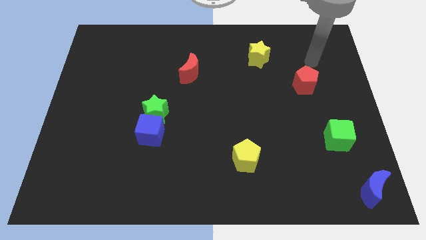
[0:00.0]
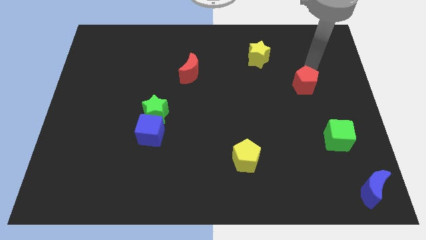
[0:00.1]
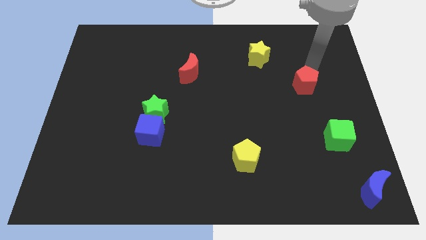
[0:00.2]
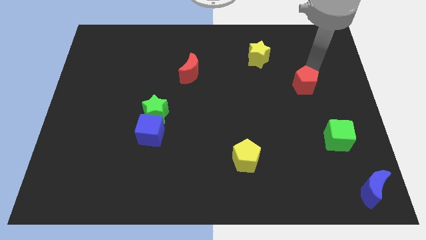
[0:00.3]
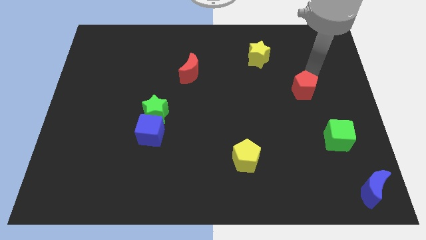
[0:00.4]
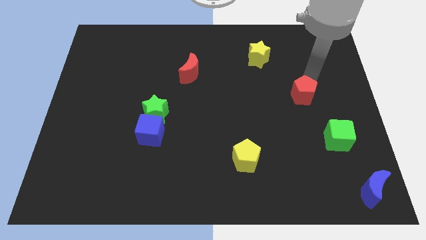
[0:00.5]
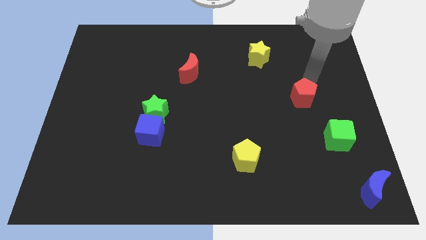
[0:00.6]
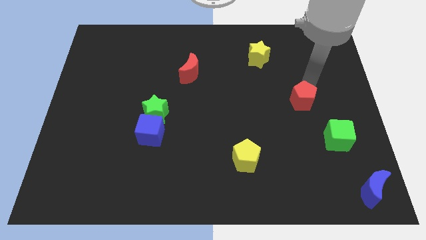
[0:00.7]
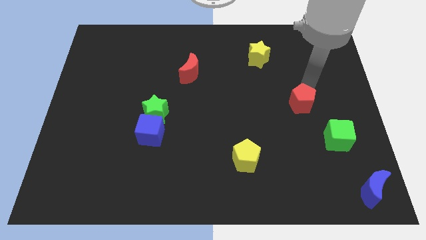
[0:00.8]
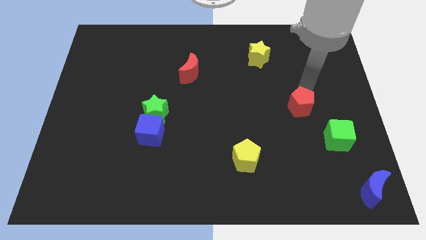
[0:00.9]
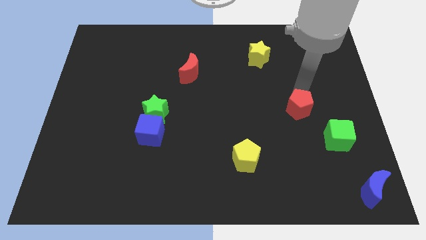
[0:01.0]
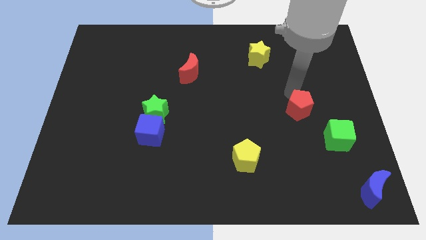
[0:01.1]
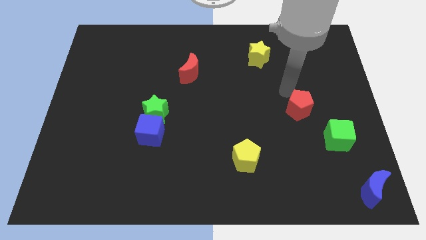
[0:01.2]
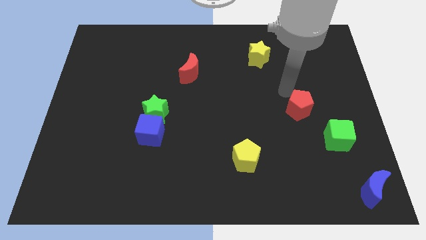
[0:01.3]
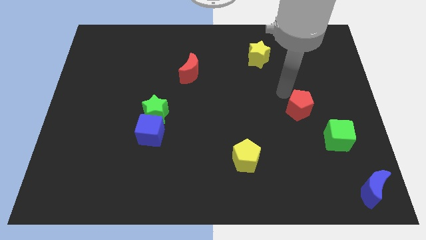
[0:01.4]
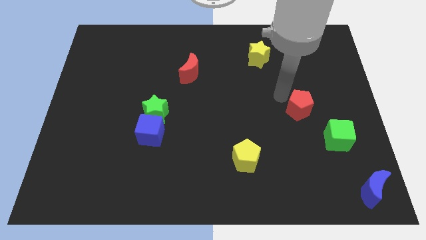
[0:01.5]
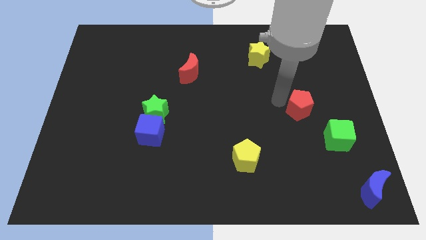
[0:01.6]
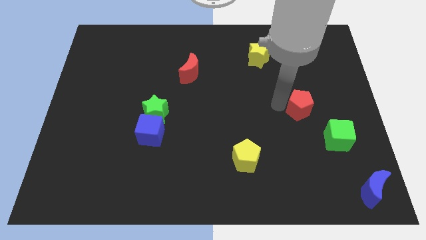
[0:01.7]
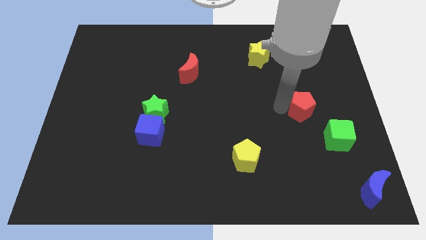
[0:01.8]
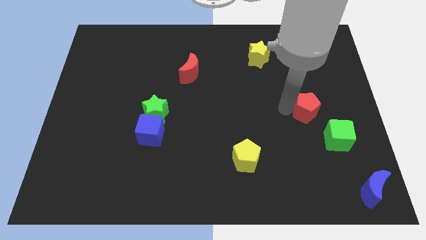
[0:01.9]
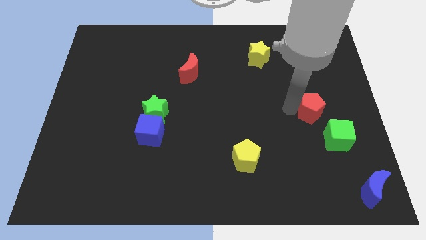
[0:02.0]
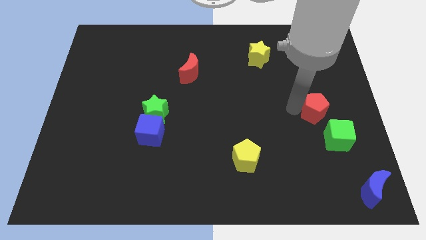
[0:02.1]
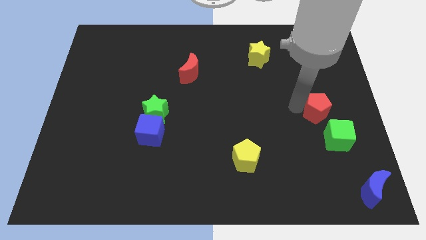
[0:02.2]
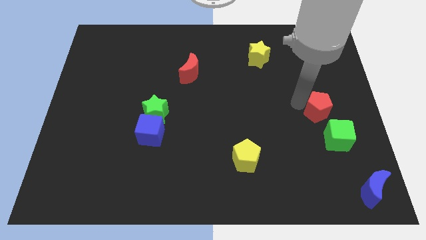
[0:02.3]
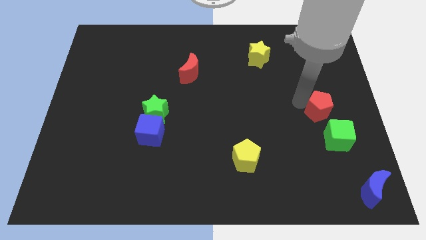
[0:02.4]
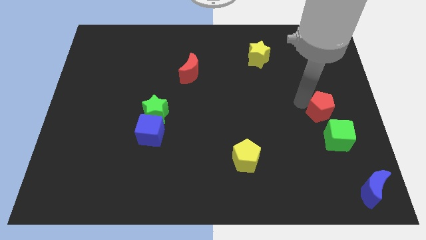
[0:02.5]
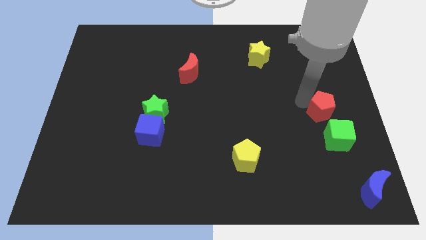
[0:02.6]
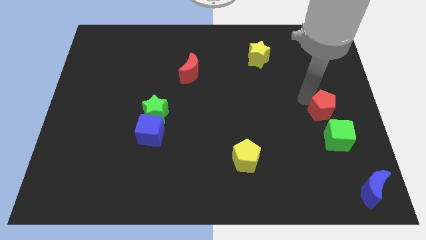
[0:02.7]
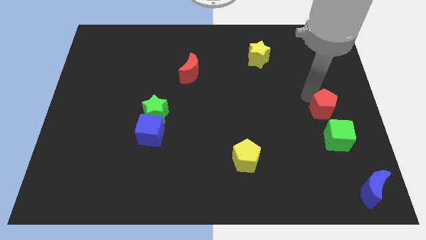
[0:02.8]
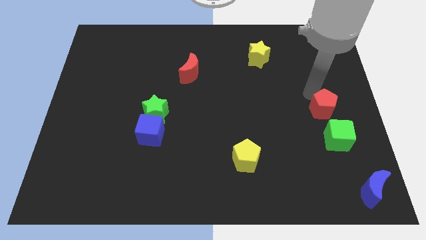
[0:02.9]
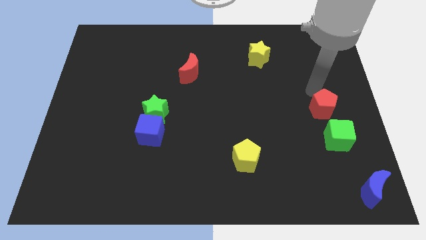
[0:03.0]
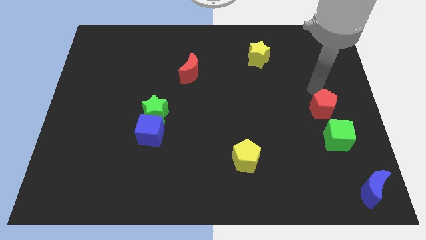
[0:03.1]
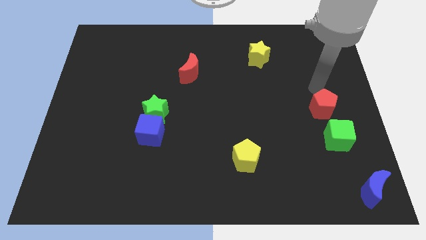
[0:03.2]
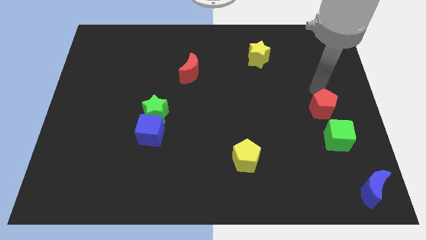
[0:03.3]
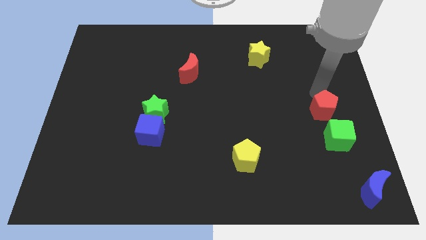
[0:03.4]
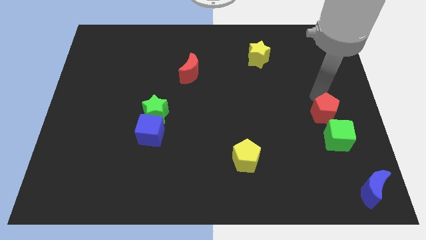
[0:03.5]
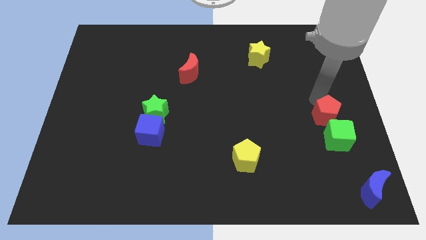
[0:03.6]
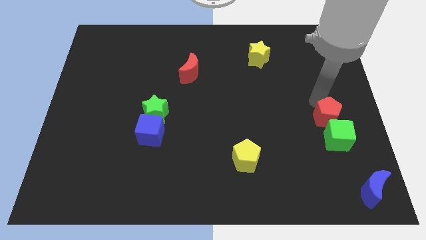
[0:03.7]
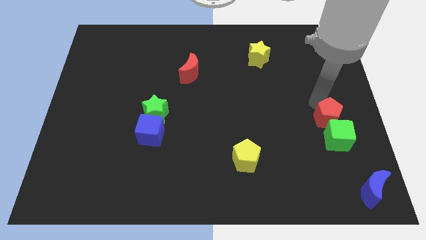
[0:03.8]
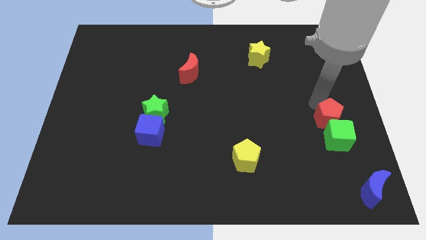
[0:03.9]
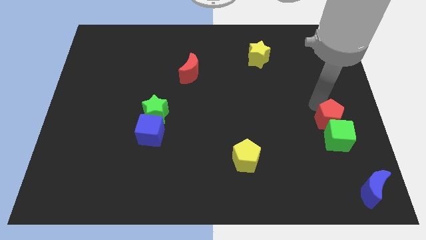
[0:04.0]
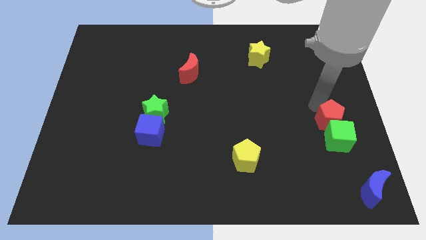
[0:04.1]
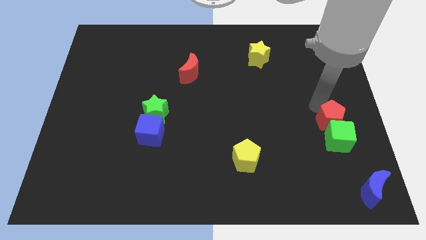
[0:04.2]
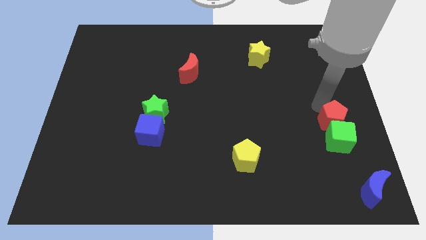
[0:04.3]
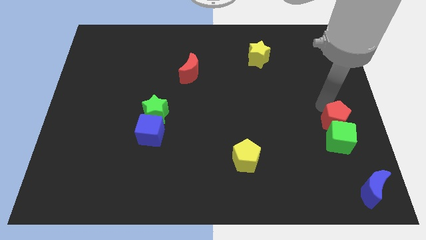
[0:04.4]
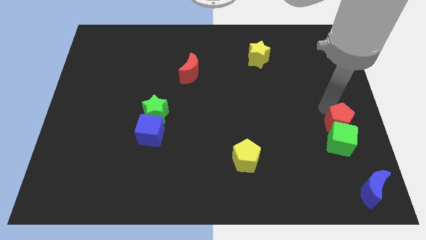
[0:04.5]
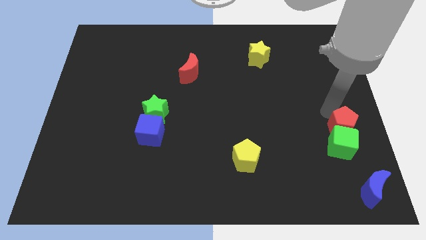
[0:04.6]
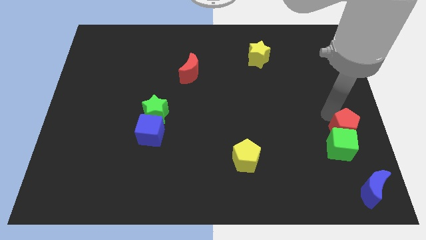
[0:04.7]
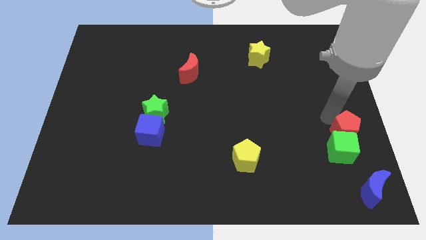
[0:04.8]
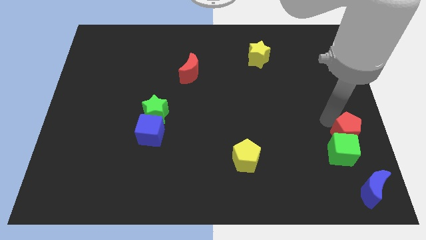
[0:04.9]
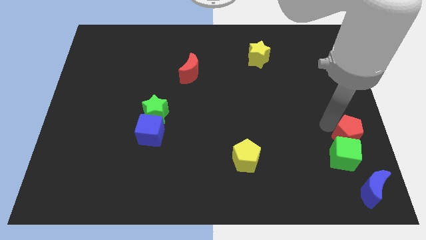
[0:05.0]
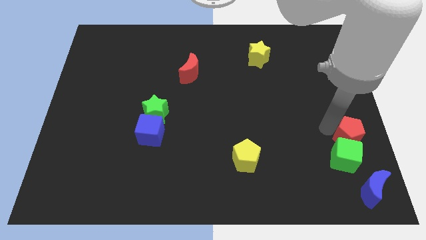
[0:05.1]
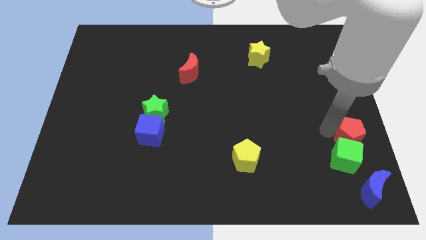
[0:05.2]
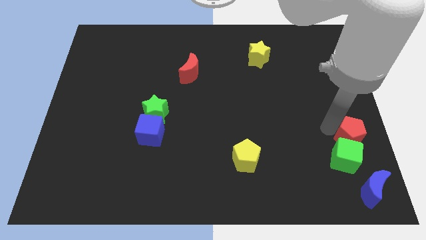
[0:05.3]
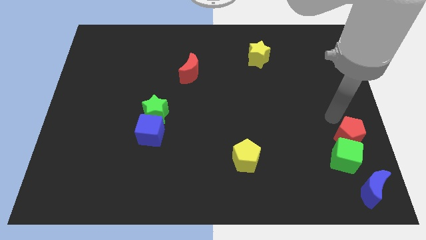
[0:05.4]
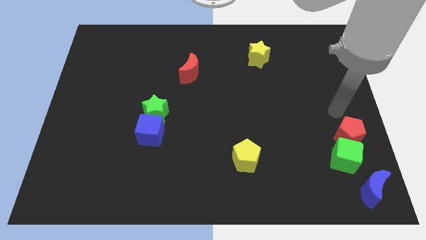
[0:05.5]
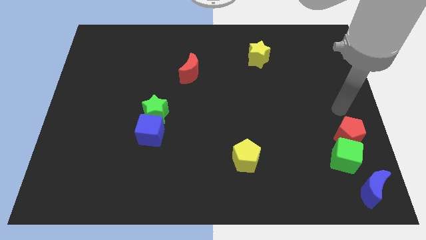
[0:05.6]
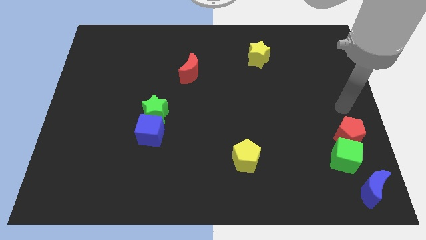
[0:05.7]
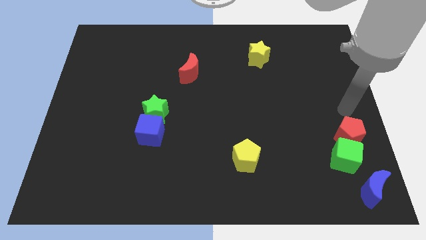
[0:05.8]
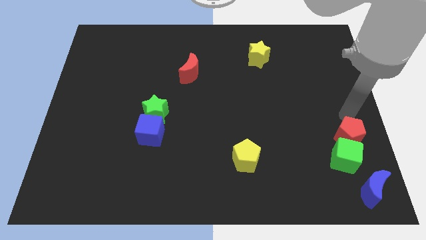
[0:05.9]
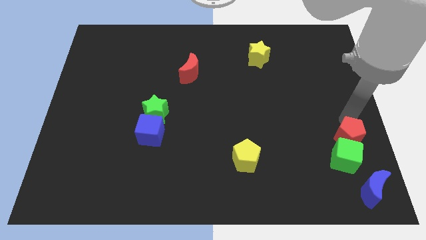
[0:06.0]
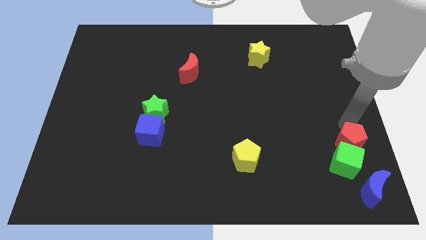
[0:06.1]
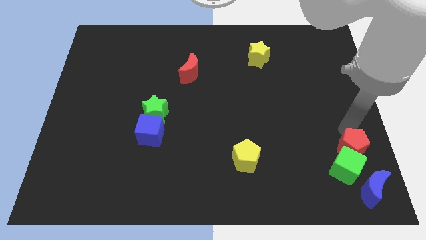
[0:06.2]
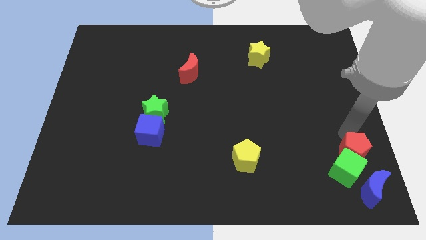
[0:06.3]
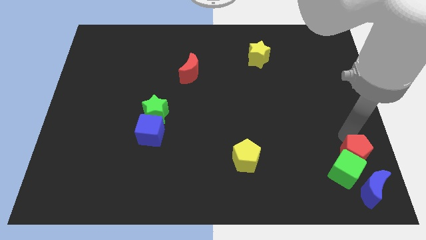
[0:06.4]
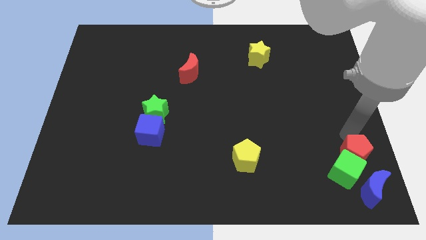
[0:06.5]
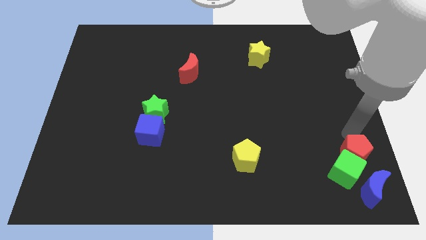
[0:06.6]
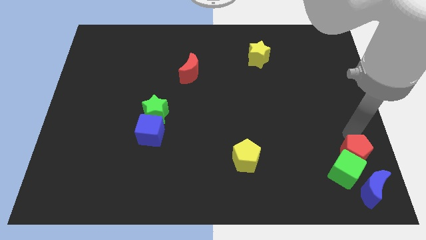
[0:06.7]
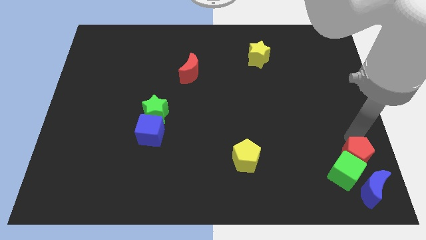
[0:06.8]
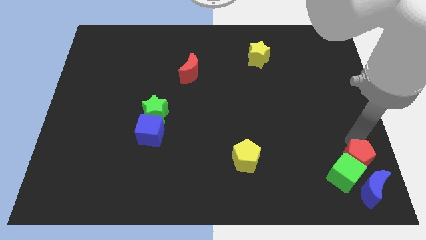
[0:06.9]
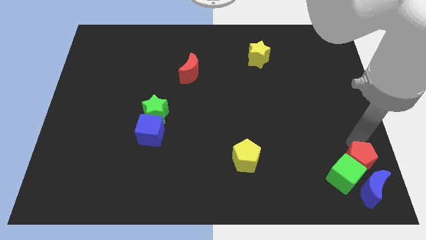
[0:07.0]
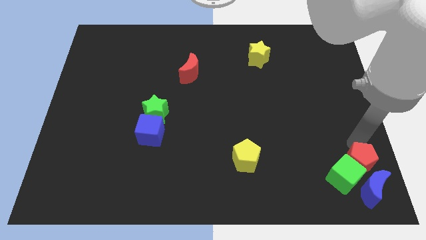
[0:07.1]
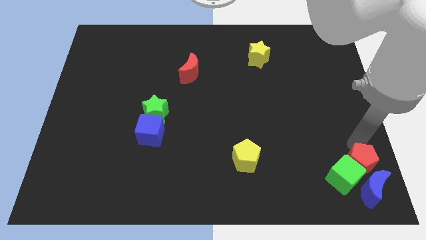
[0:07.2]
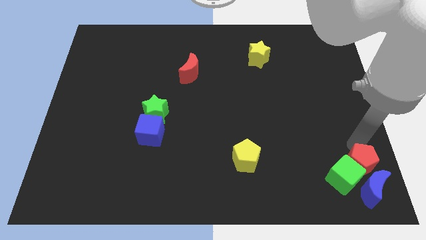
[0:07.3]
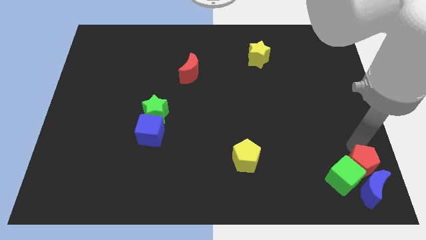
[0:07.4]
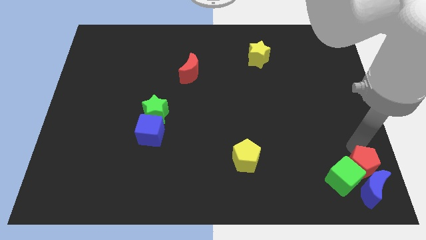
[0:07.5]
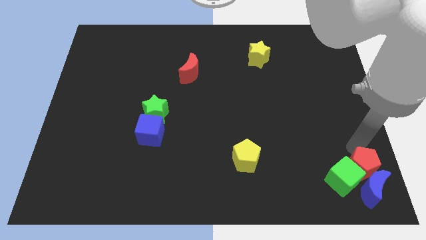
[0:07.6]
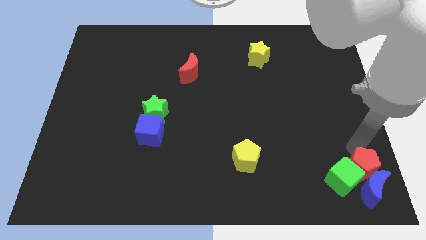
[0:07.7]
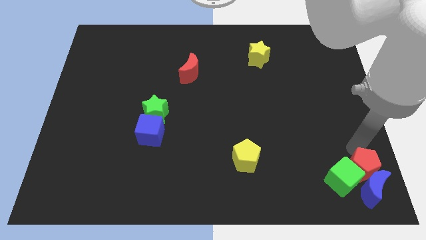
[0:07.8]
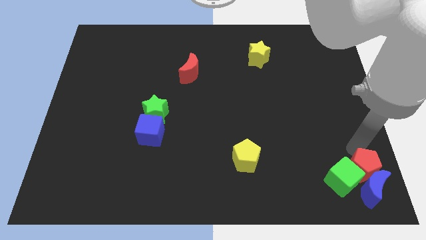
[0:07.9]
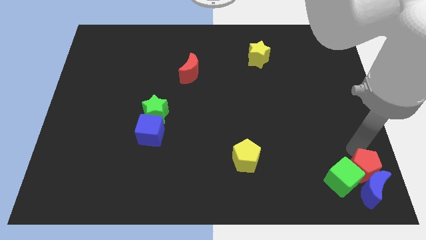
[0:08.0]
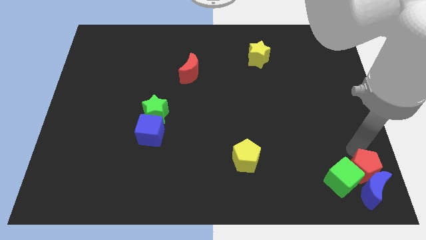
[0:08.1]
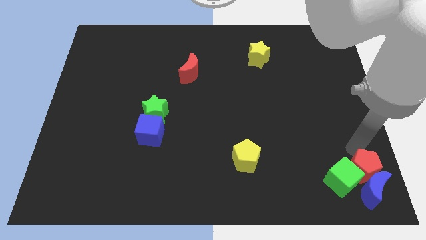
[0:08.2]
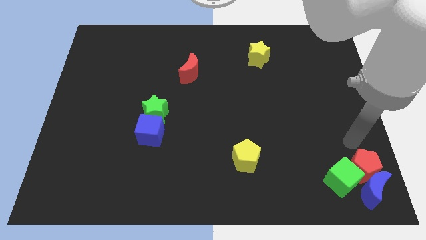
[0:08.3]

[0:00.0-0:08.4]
push the red pentagon and green cube towards the blue moon

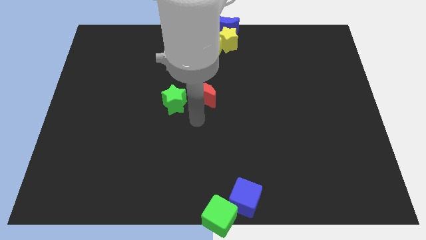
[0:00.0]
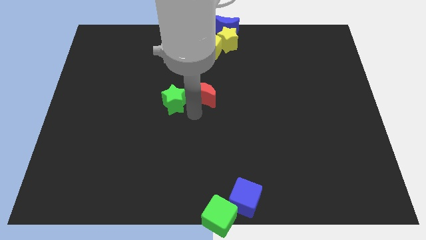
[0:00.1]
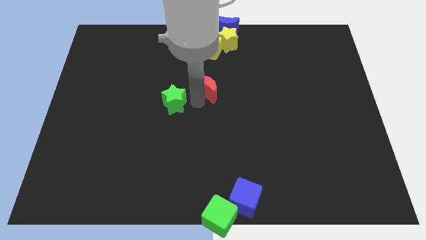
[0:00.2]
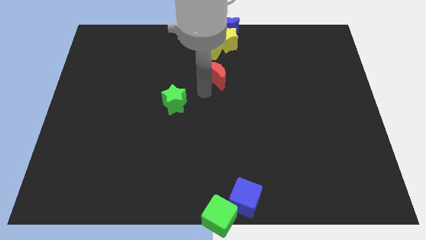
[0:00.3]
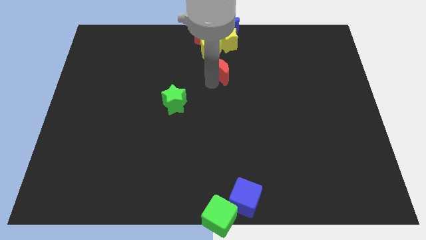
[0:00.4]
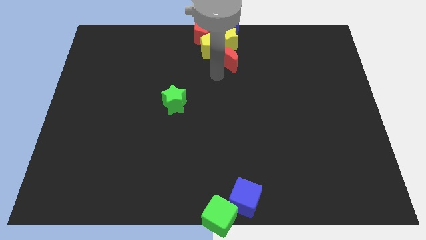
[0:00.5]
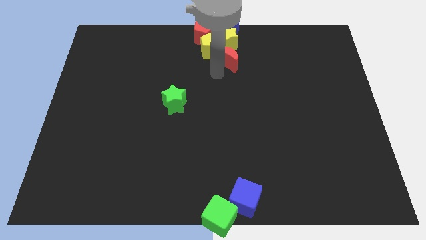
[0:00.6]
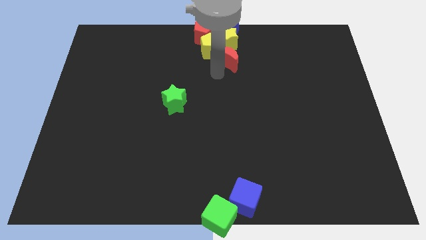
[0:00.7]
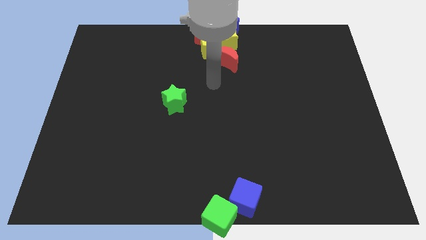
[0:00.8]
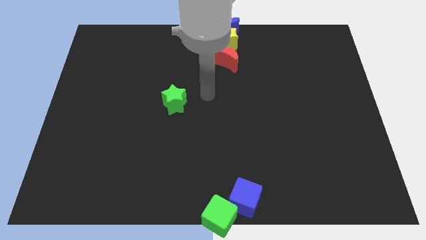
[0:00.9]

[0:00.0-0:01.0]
move the red moon into the group of object
